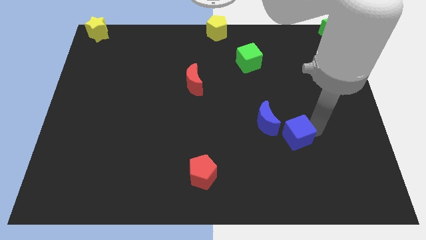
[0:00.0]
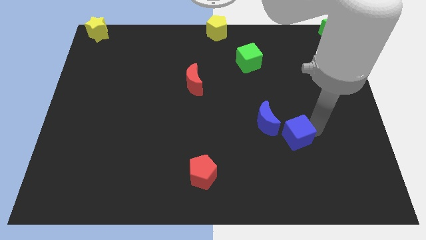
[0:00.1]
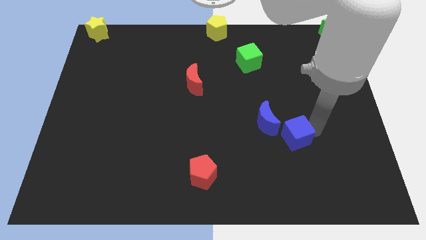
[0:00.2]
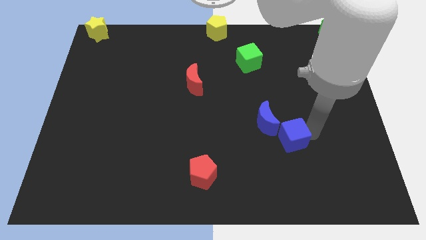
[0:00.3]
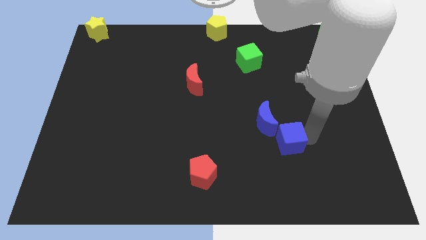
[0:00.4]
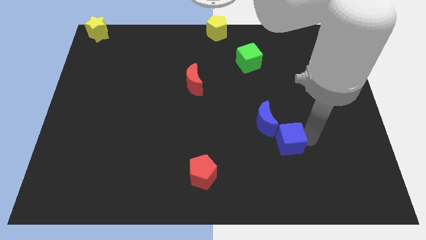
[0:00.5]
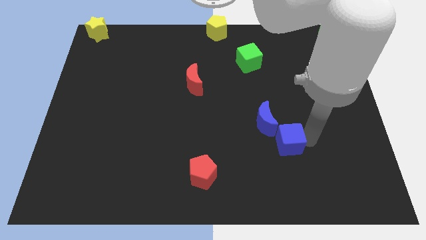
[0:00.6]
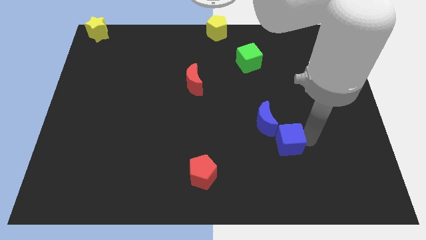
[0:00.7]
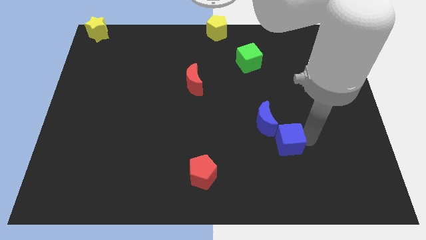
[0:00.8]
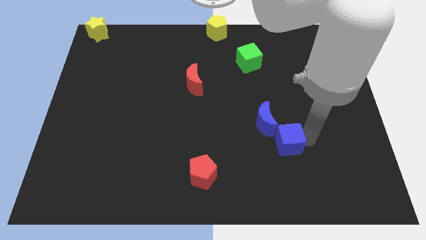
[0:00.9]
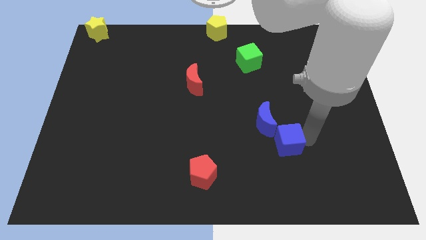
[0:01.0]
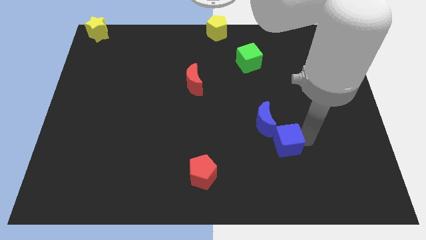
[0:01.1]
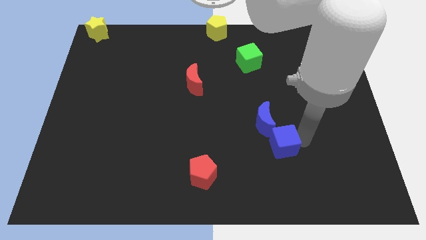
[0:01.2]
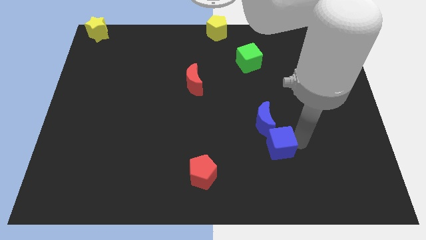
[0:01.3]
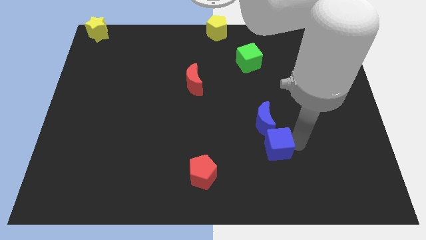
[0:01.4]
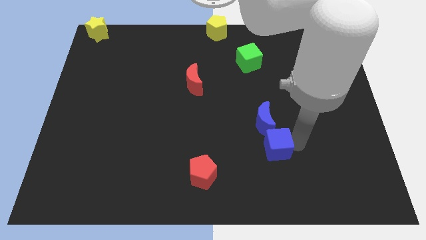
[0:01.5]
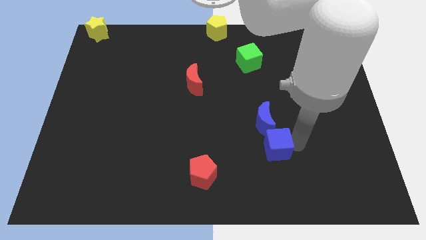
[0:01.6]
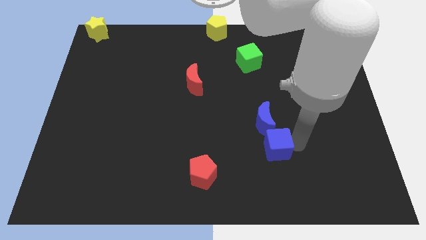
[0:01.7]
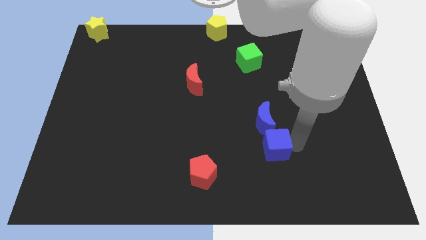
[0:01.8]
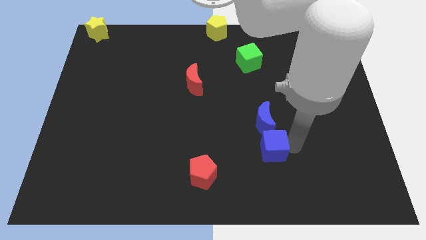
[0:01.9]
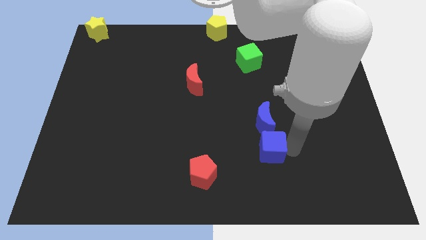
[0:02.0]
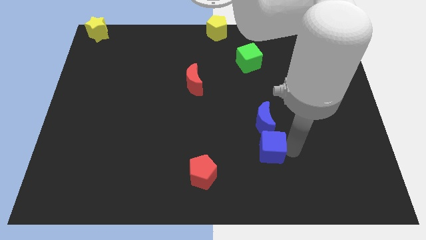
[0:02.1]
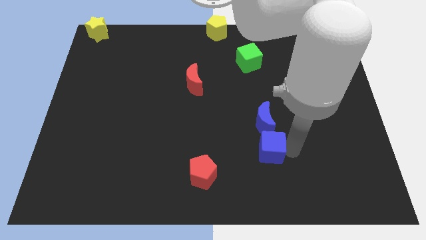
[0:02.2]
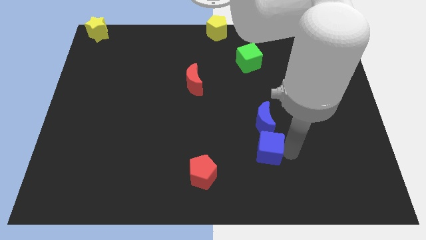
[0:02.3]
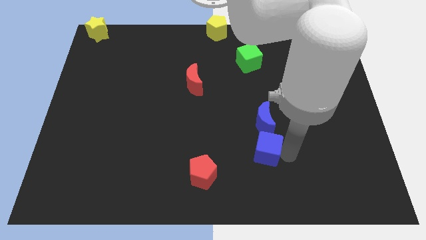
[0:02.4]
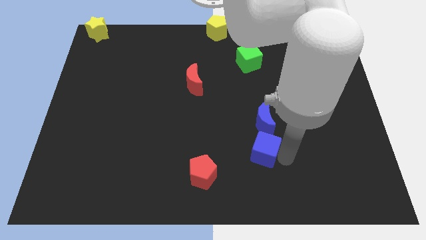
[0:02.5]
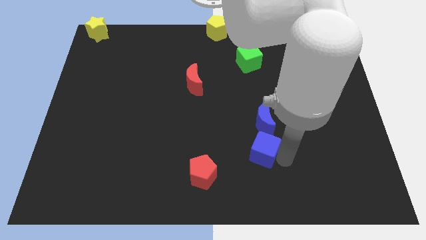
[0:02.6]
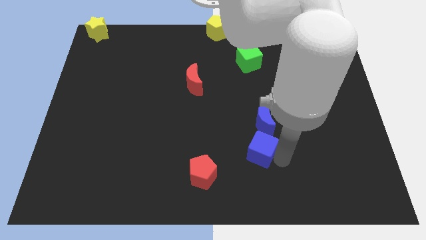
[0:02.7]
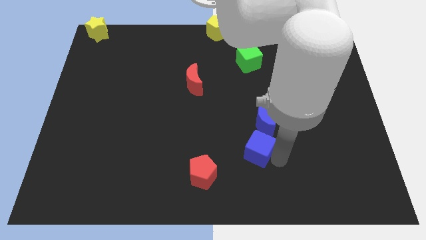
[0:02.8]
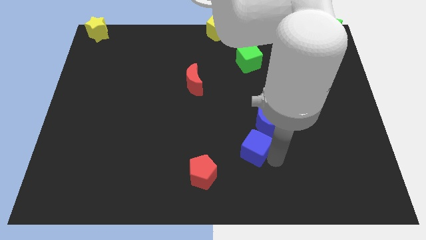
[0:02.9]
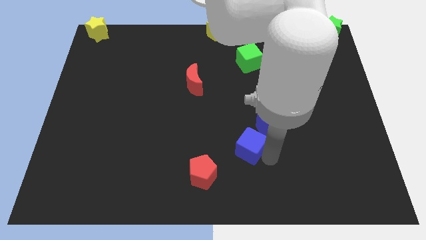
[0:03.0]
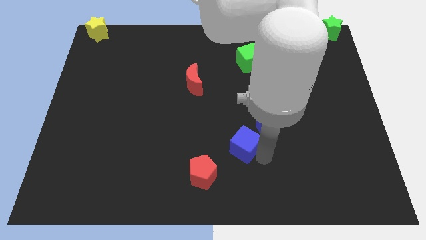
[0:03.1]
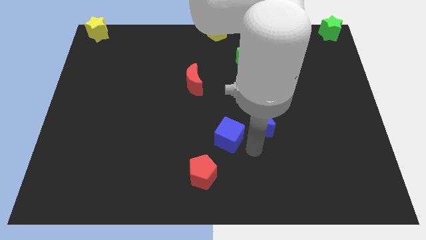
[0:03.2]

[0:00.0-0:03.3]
move the blue cube in between the blue moon and red pentagon

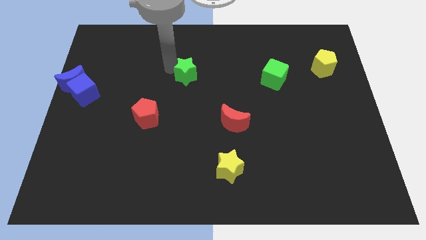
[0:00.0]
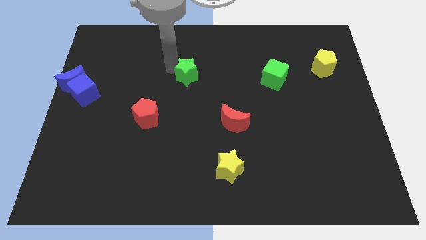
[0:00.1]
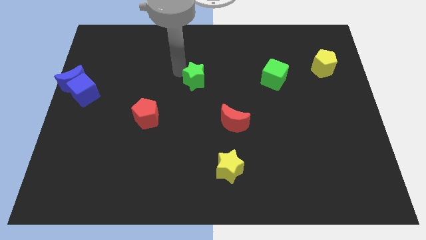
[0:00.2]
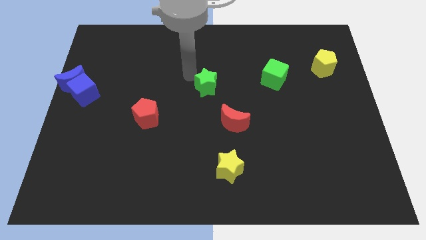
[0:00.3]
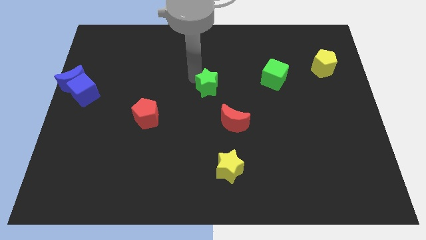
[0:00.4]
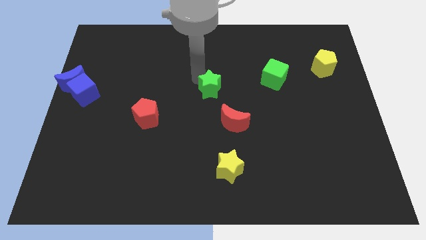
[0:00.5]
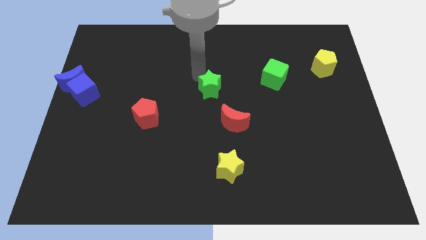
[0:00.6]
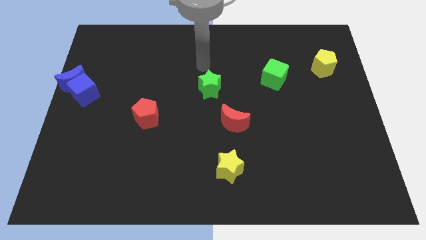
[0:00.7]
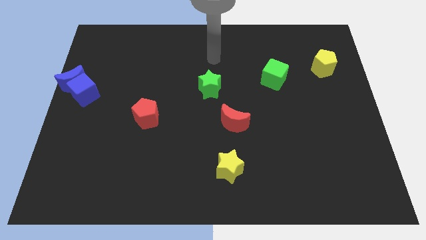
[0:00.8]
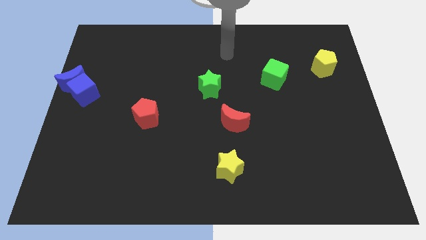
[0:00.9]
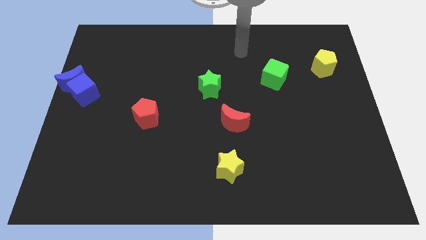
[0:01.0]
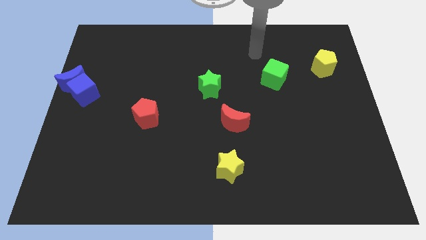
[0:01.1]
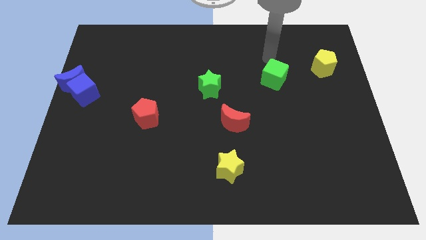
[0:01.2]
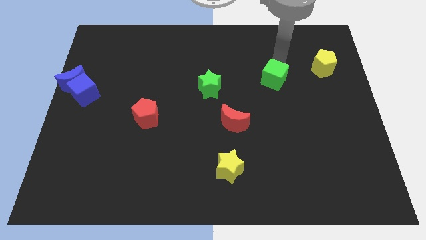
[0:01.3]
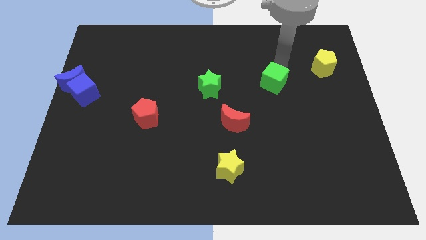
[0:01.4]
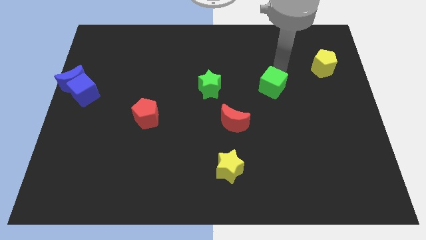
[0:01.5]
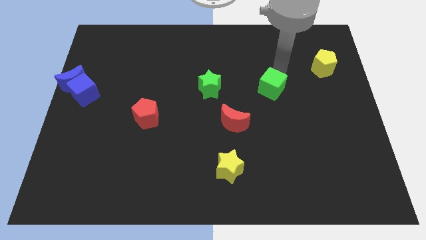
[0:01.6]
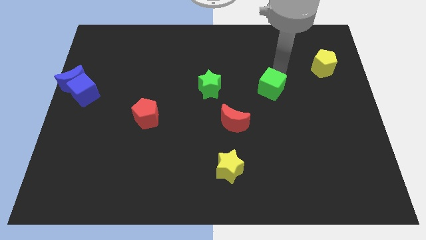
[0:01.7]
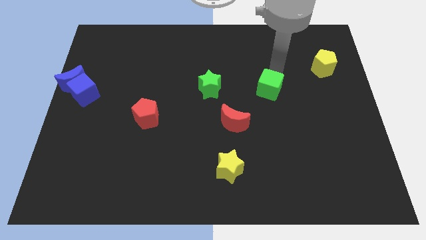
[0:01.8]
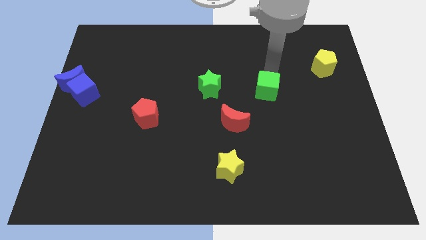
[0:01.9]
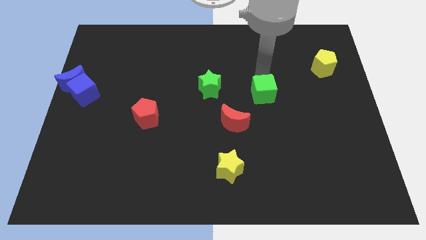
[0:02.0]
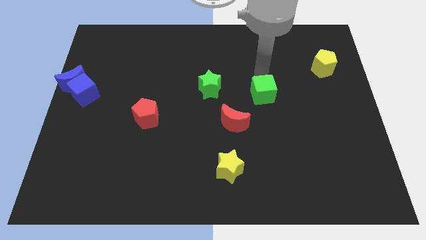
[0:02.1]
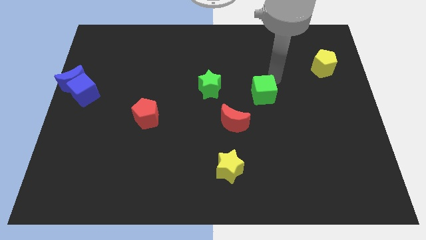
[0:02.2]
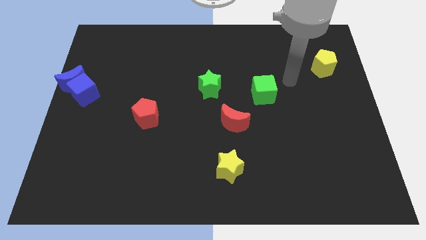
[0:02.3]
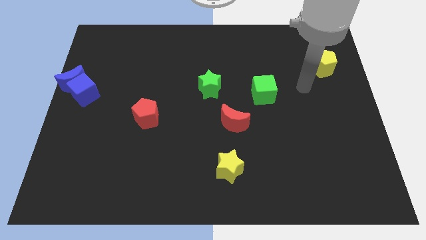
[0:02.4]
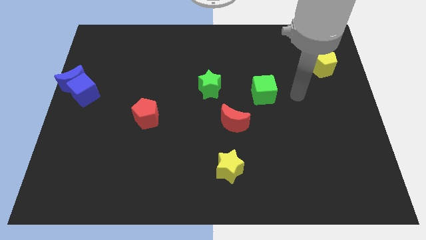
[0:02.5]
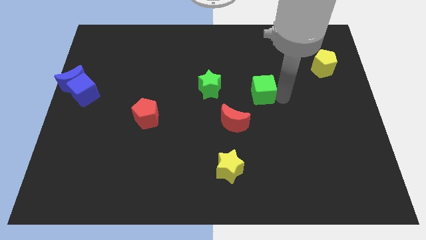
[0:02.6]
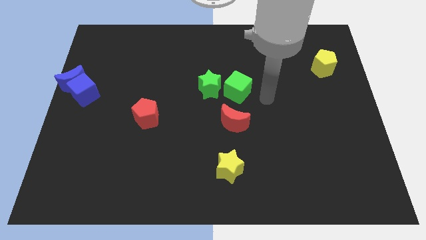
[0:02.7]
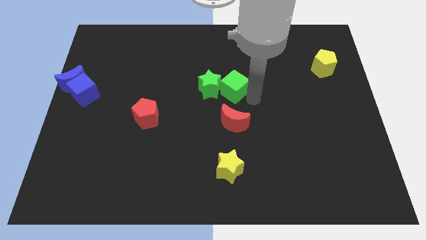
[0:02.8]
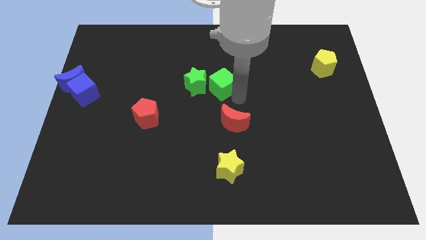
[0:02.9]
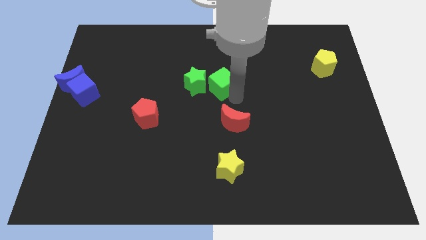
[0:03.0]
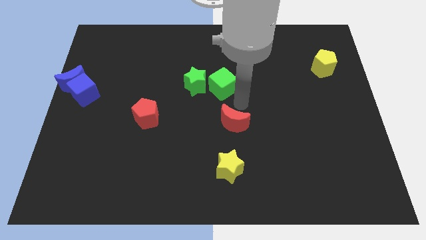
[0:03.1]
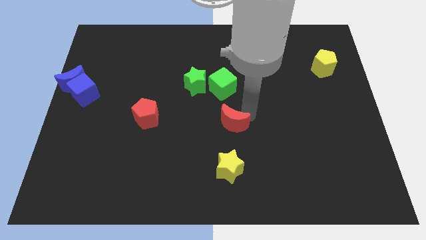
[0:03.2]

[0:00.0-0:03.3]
push the green cube into the green star

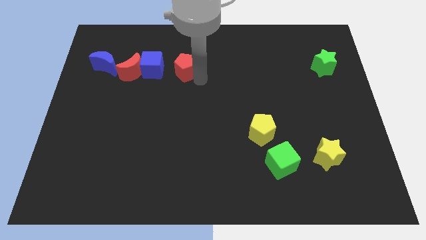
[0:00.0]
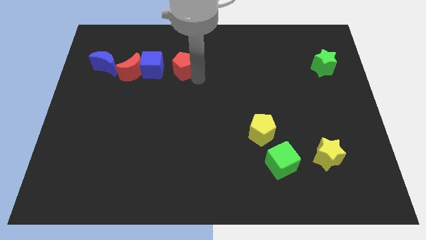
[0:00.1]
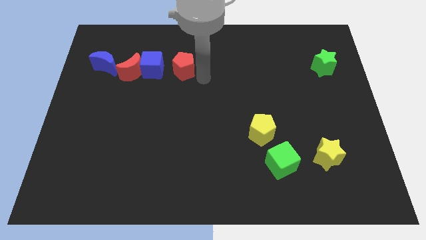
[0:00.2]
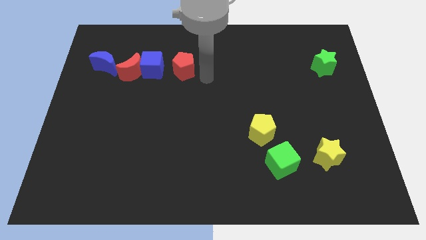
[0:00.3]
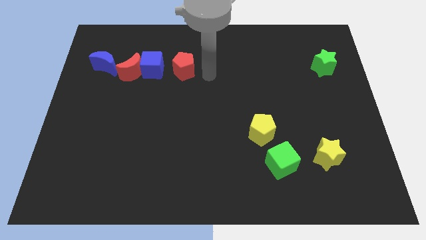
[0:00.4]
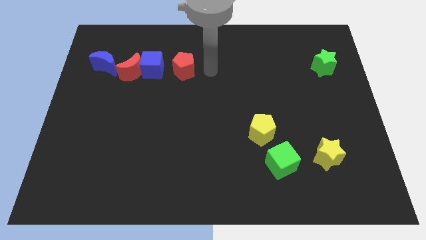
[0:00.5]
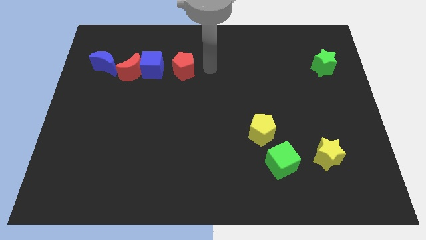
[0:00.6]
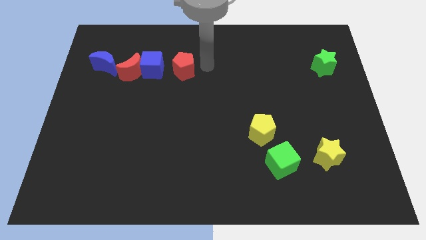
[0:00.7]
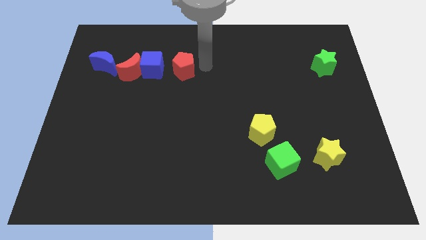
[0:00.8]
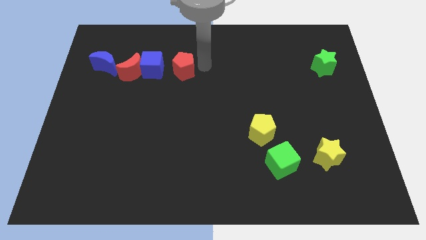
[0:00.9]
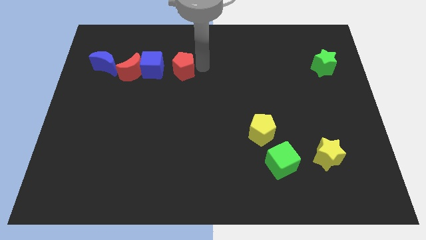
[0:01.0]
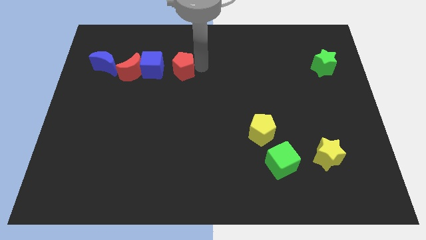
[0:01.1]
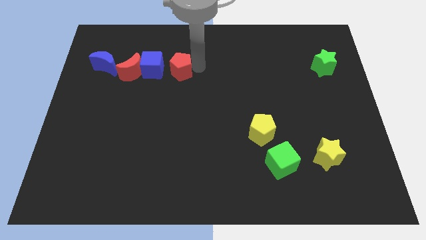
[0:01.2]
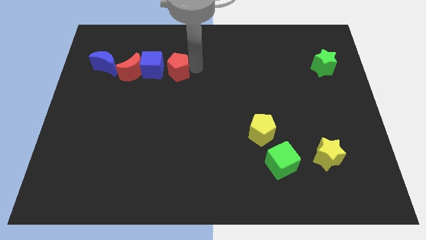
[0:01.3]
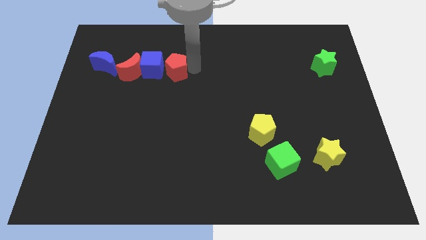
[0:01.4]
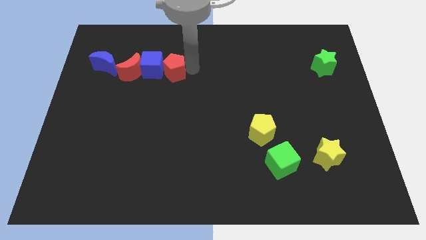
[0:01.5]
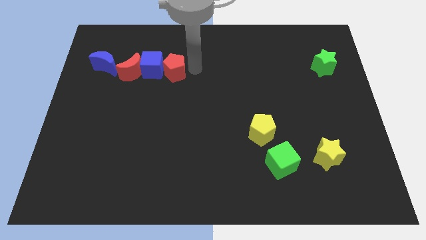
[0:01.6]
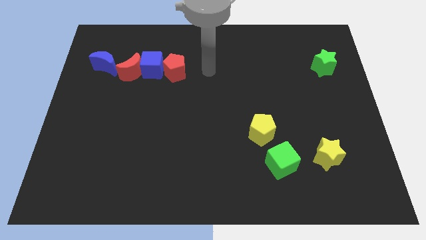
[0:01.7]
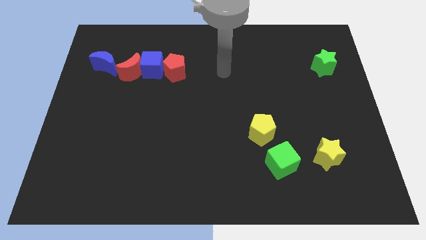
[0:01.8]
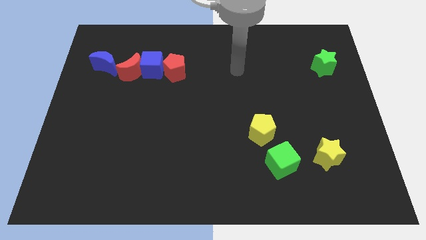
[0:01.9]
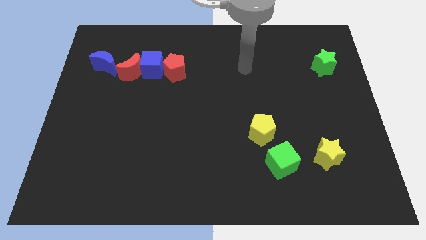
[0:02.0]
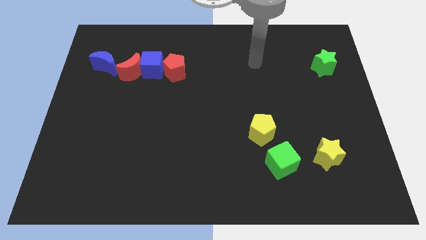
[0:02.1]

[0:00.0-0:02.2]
push the red pentagon into the blue cube
